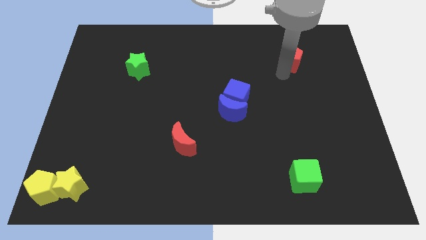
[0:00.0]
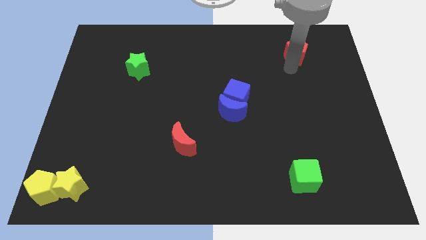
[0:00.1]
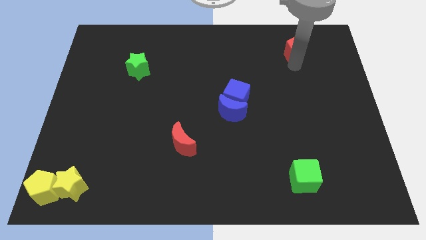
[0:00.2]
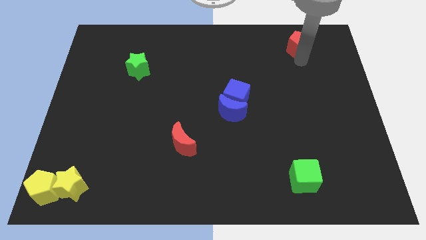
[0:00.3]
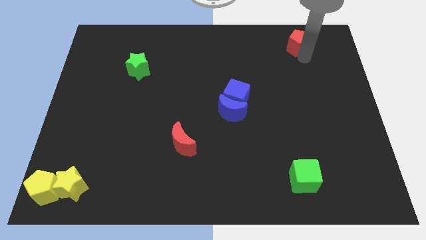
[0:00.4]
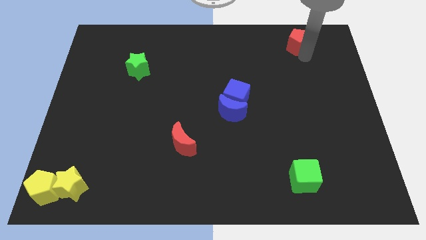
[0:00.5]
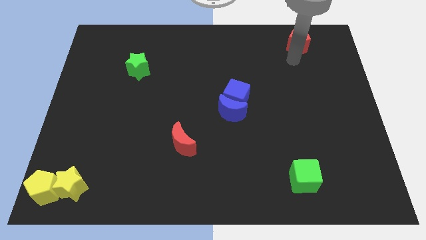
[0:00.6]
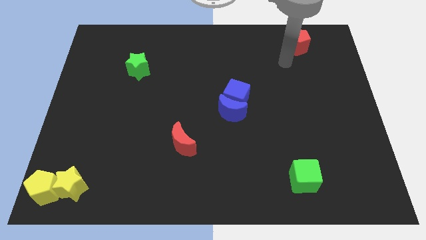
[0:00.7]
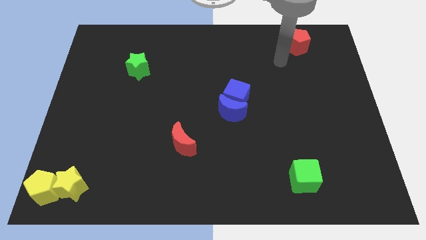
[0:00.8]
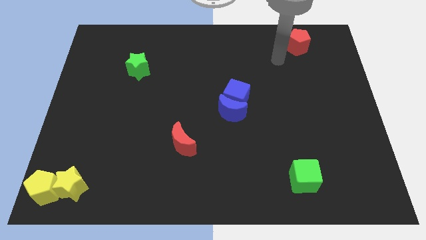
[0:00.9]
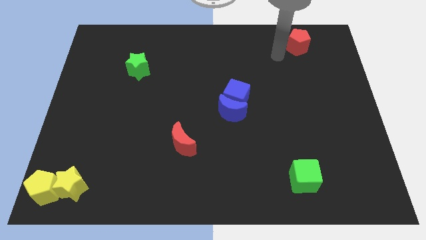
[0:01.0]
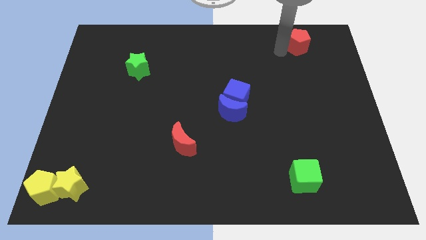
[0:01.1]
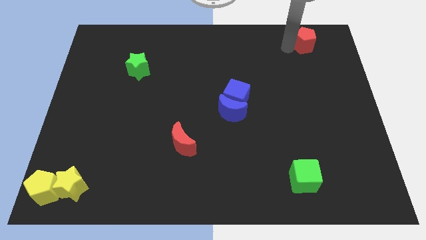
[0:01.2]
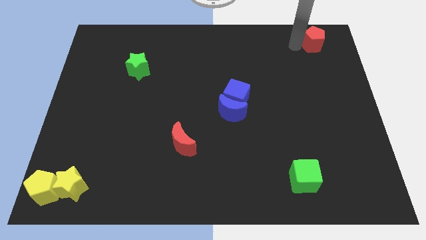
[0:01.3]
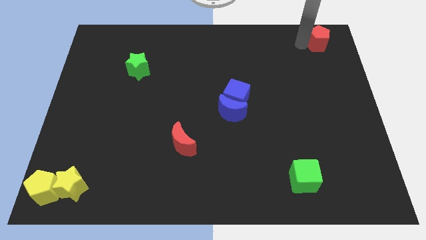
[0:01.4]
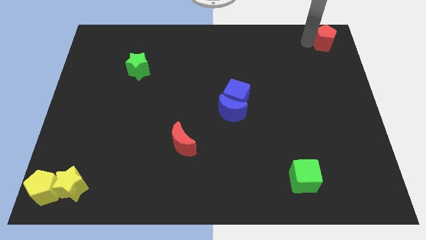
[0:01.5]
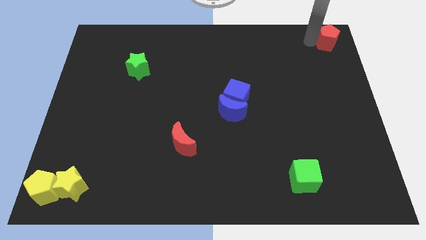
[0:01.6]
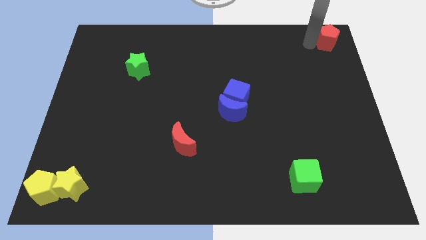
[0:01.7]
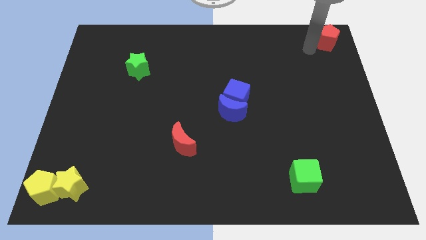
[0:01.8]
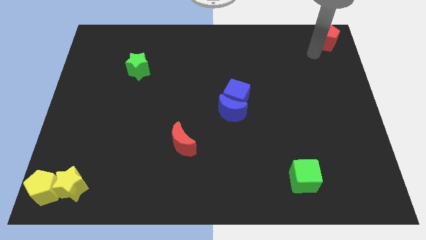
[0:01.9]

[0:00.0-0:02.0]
slide the red pentagon to the top right of the board

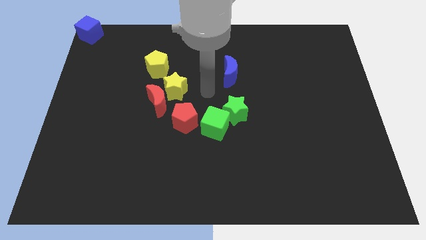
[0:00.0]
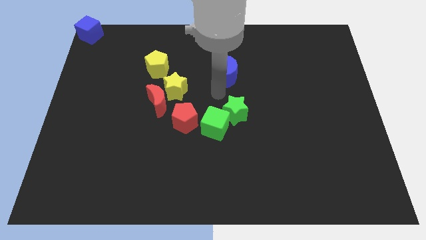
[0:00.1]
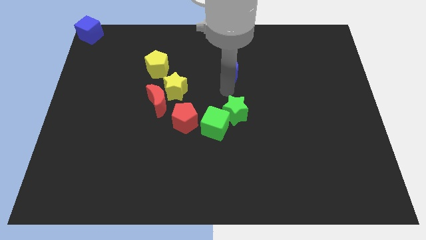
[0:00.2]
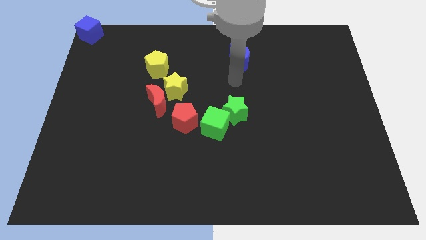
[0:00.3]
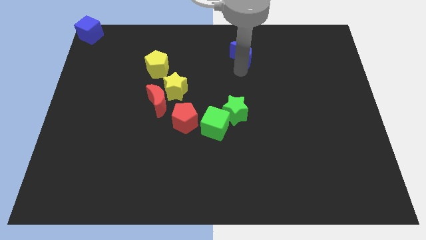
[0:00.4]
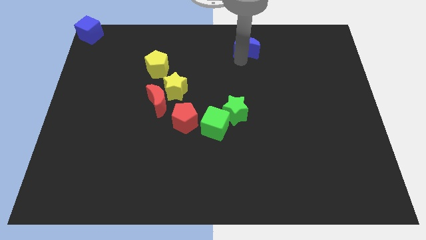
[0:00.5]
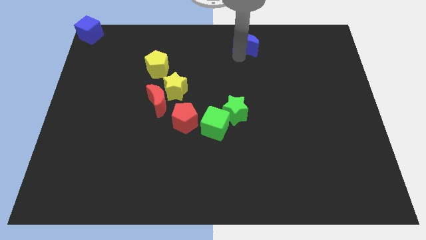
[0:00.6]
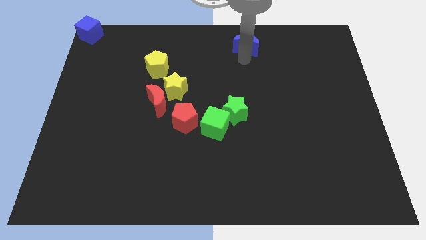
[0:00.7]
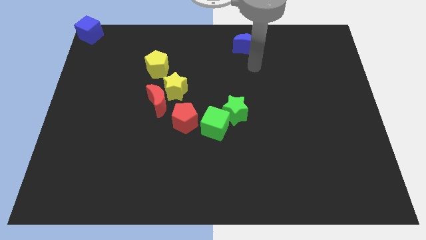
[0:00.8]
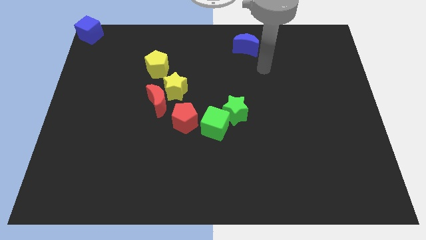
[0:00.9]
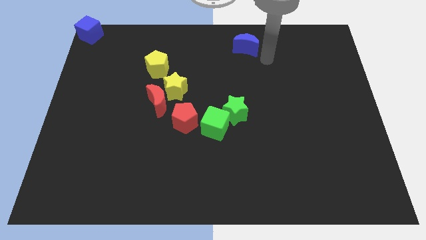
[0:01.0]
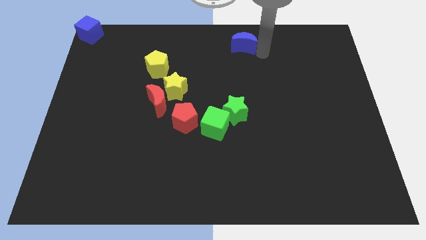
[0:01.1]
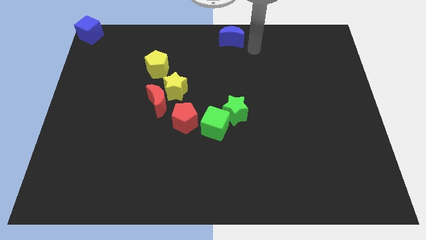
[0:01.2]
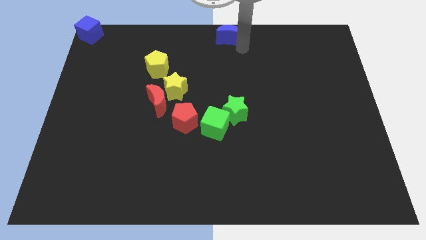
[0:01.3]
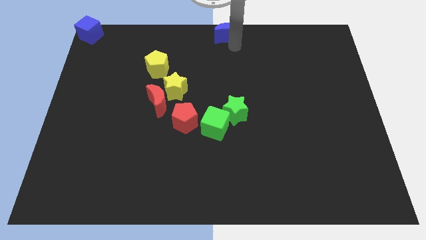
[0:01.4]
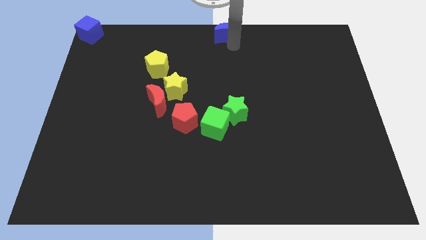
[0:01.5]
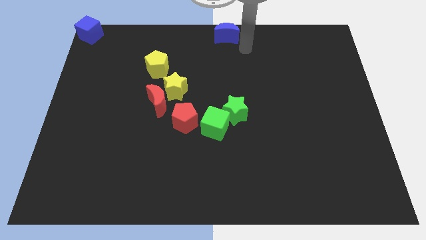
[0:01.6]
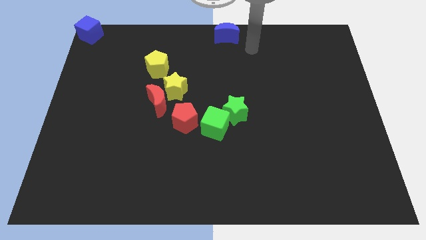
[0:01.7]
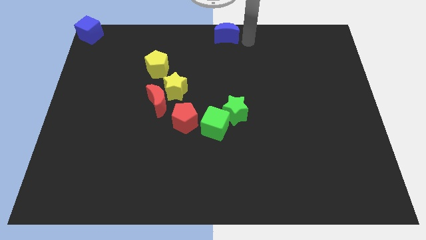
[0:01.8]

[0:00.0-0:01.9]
place the blue moon to the top center

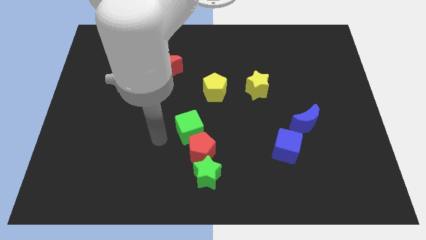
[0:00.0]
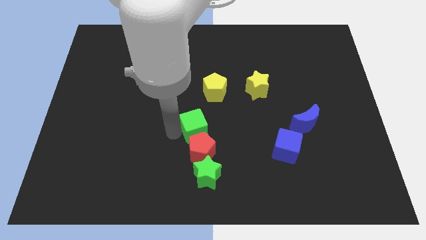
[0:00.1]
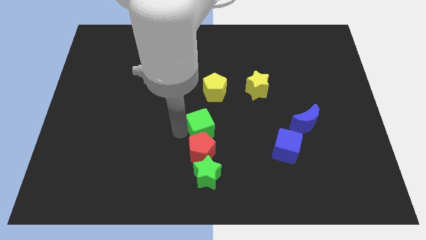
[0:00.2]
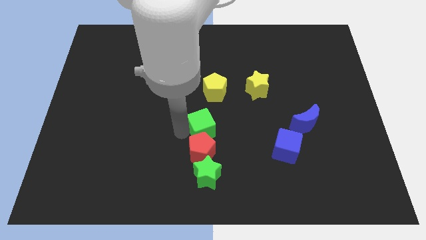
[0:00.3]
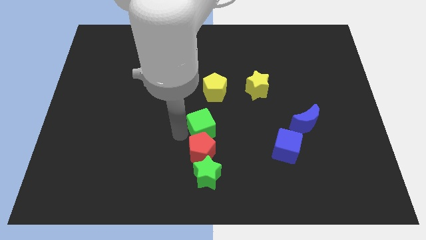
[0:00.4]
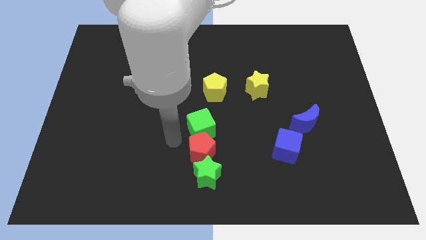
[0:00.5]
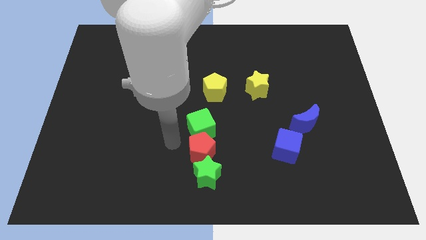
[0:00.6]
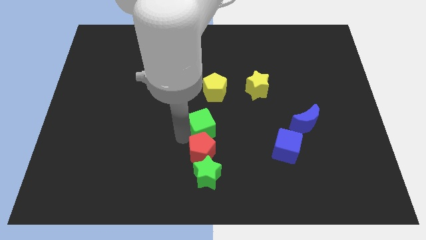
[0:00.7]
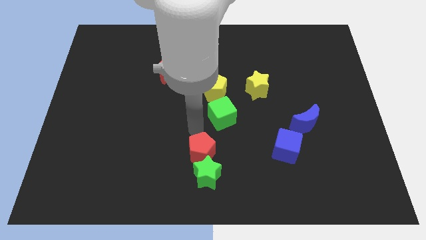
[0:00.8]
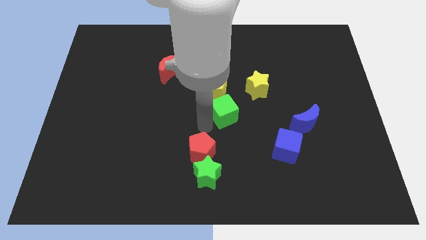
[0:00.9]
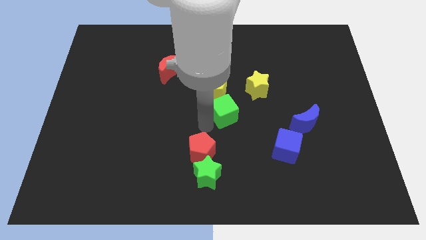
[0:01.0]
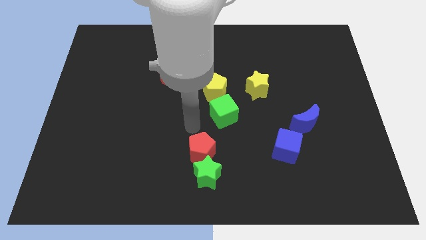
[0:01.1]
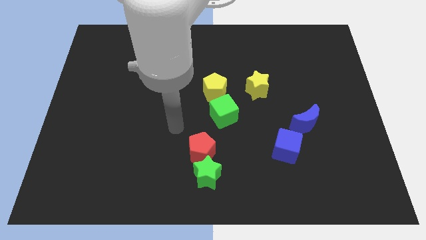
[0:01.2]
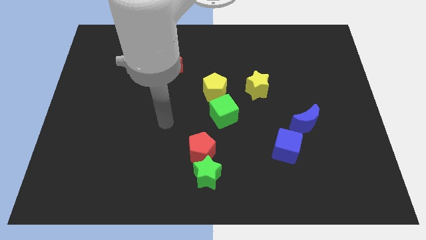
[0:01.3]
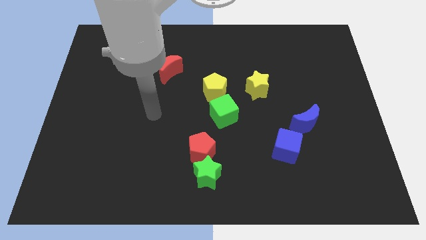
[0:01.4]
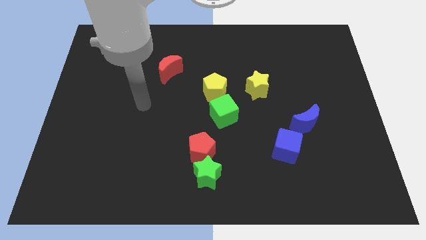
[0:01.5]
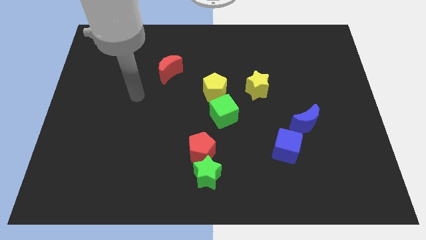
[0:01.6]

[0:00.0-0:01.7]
move the green cube below the yellow pentagon

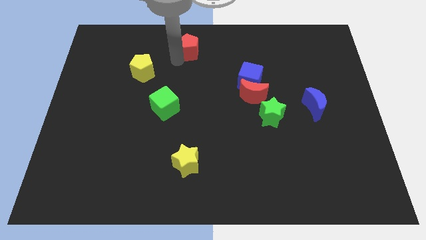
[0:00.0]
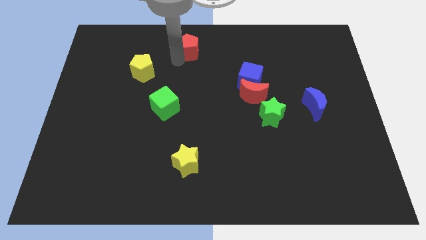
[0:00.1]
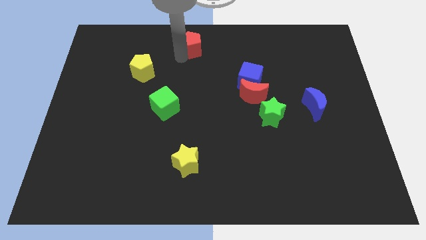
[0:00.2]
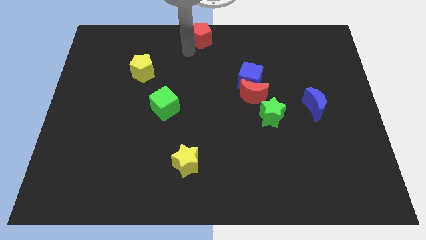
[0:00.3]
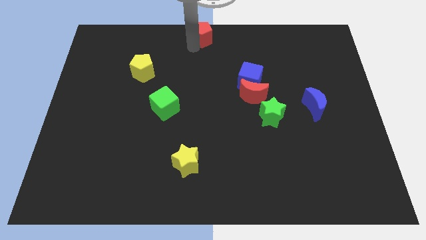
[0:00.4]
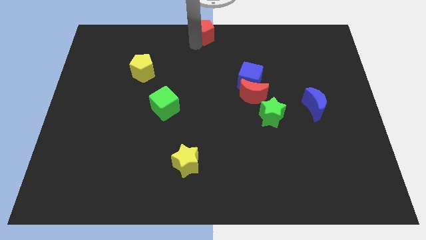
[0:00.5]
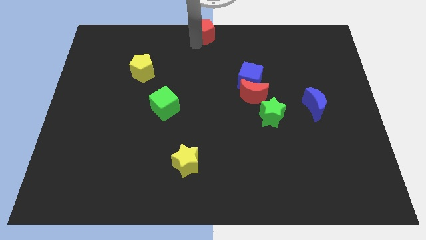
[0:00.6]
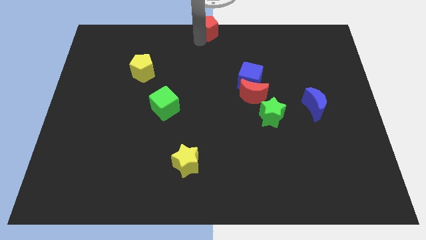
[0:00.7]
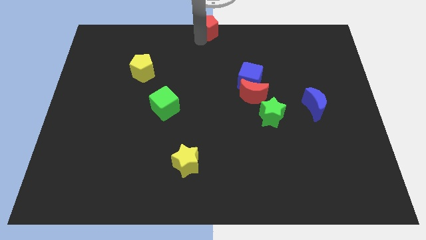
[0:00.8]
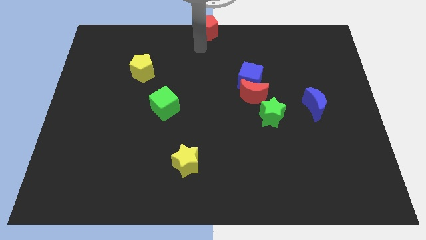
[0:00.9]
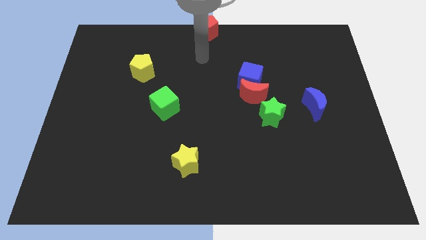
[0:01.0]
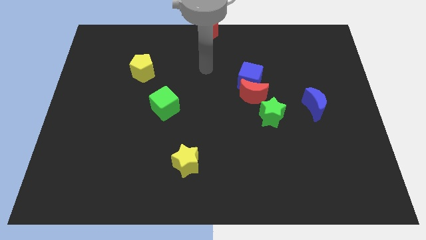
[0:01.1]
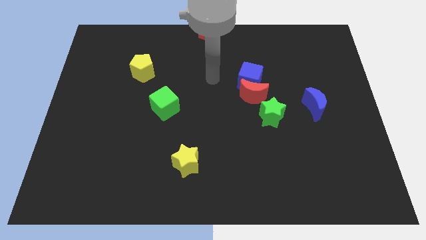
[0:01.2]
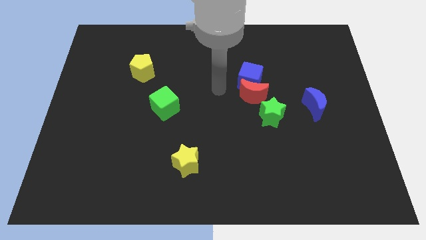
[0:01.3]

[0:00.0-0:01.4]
place red pentagon at the top center

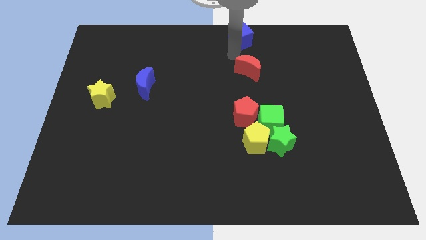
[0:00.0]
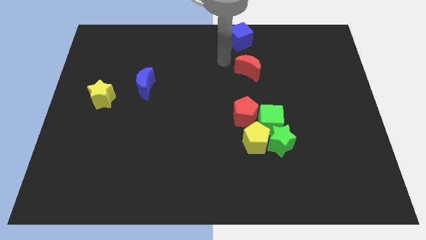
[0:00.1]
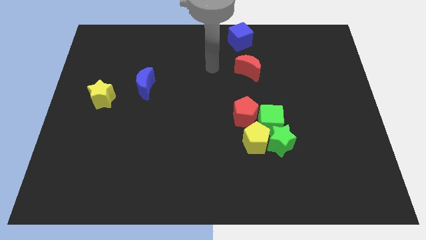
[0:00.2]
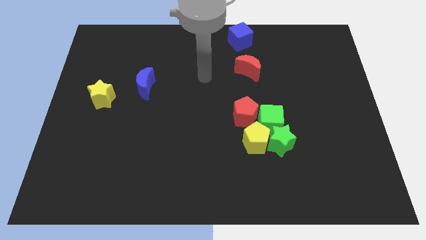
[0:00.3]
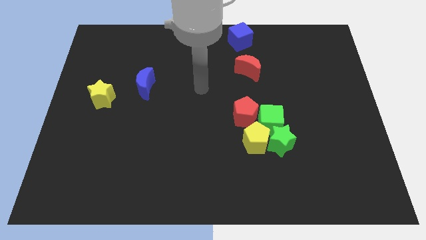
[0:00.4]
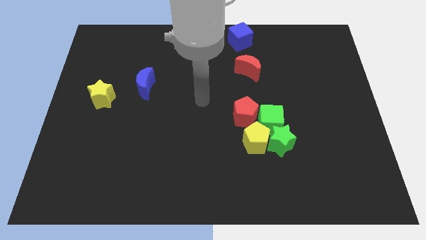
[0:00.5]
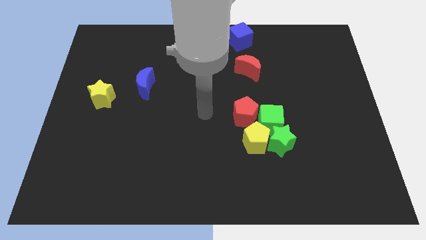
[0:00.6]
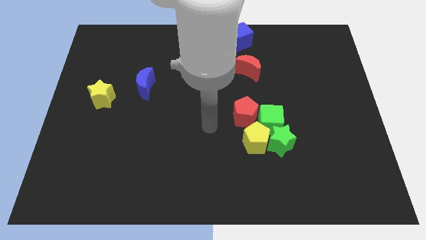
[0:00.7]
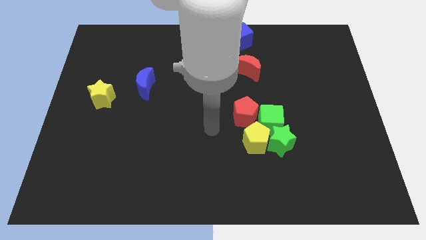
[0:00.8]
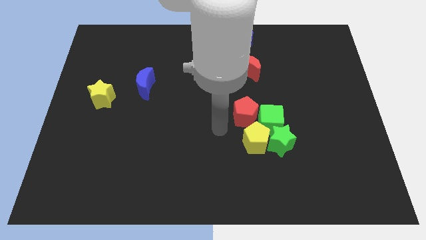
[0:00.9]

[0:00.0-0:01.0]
move your arm away from blue cube

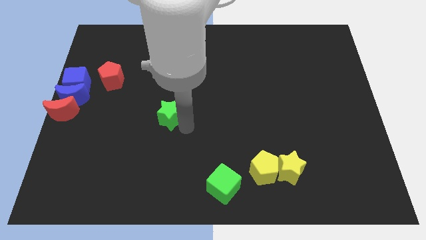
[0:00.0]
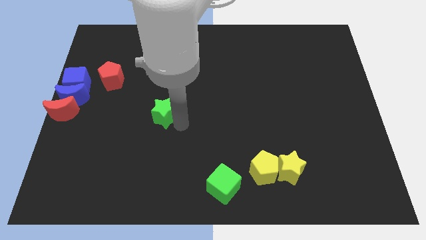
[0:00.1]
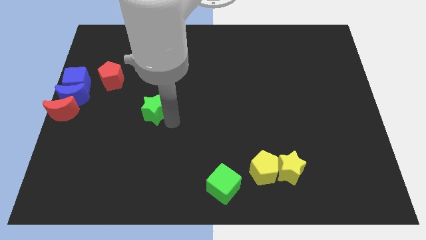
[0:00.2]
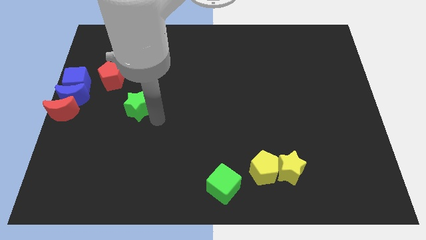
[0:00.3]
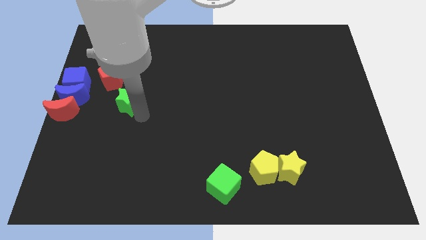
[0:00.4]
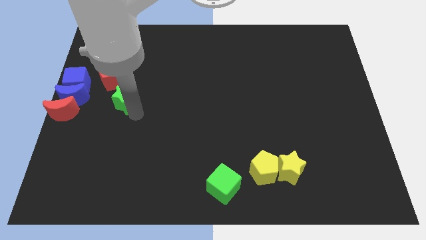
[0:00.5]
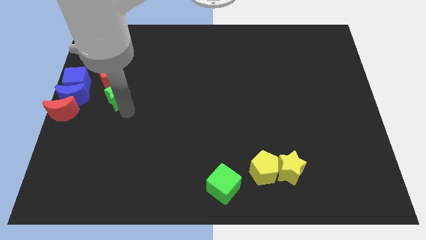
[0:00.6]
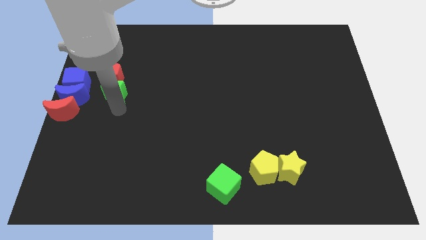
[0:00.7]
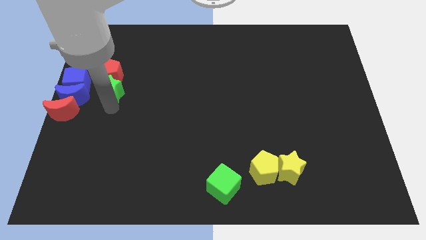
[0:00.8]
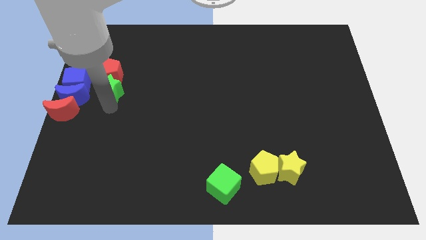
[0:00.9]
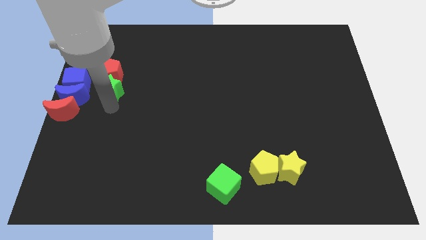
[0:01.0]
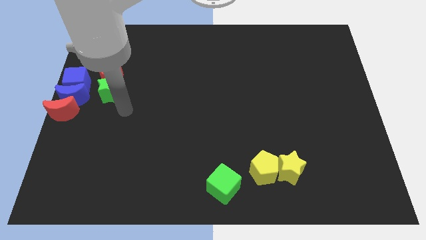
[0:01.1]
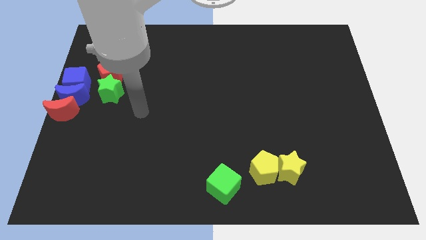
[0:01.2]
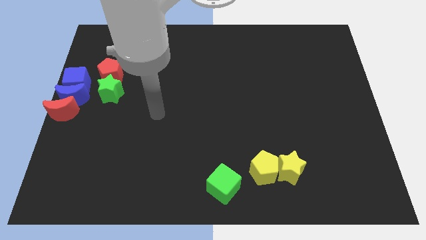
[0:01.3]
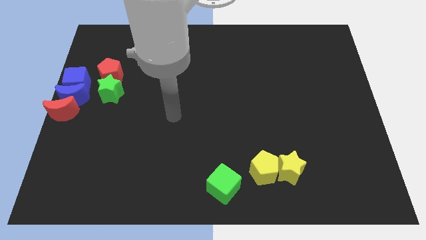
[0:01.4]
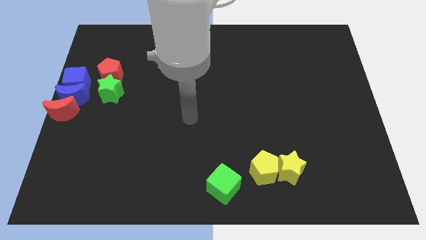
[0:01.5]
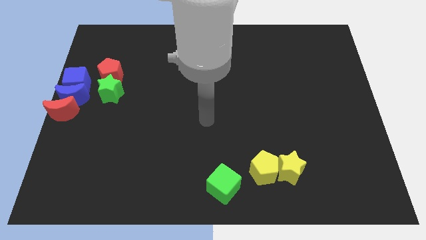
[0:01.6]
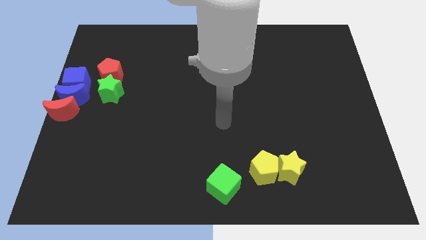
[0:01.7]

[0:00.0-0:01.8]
push the green star into the red pentagon
